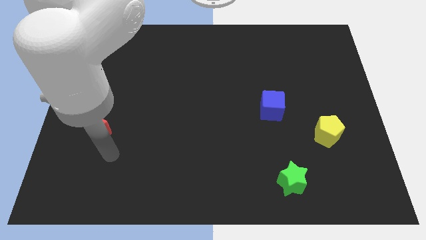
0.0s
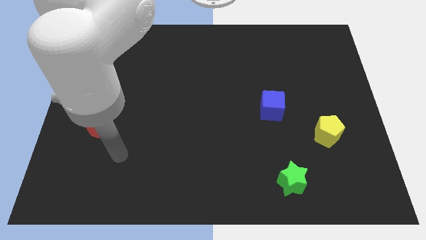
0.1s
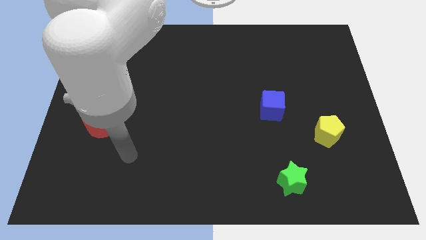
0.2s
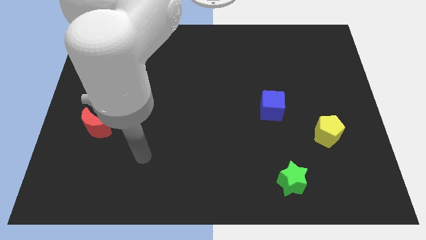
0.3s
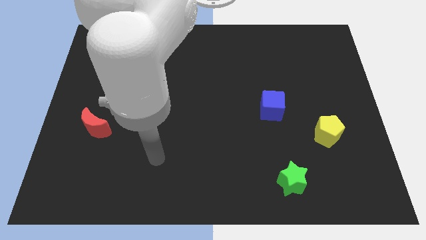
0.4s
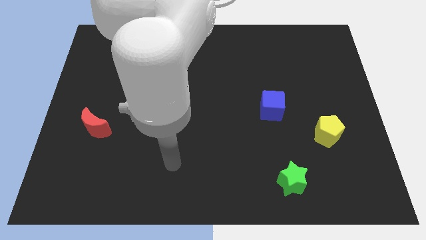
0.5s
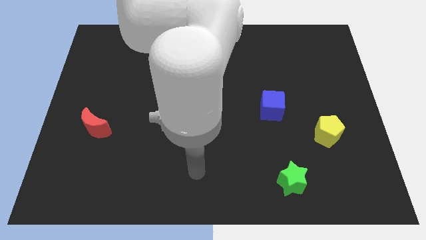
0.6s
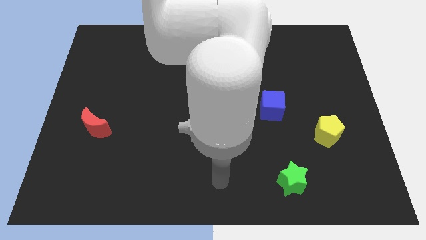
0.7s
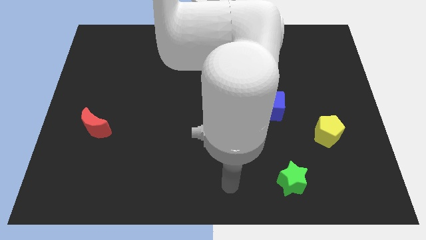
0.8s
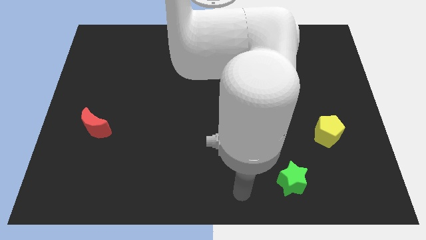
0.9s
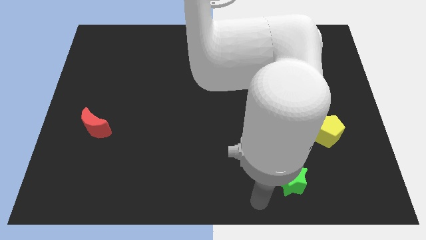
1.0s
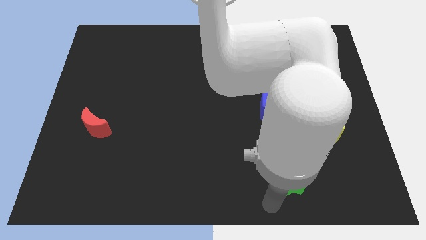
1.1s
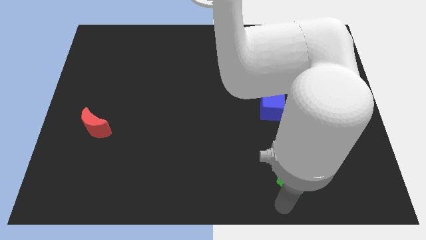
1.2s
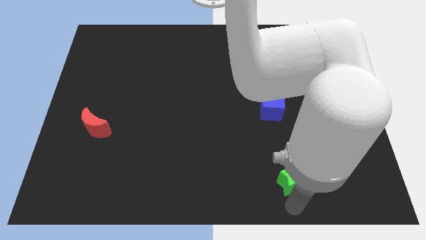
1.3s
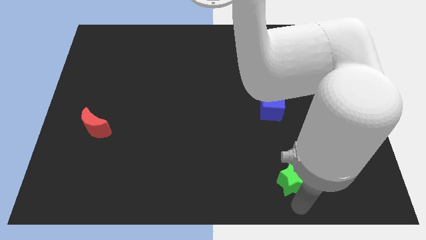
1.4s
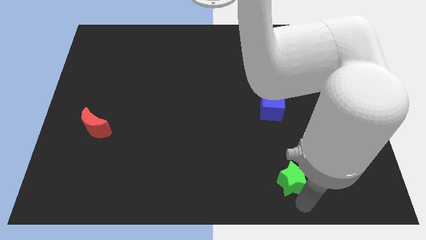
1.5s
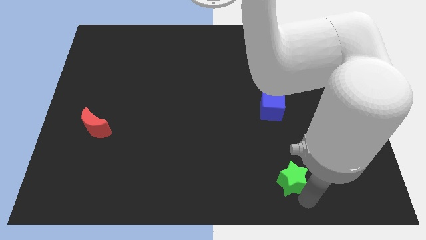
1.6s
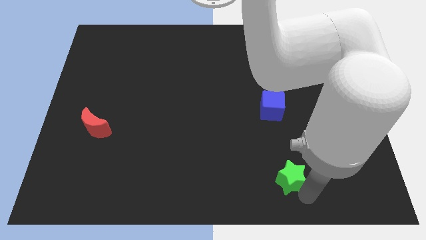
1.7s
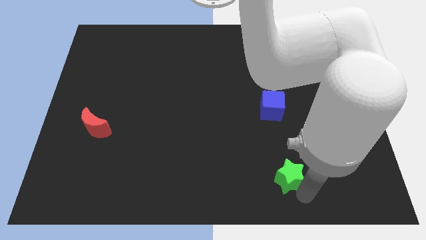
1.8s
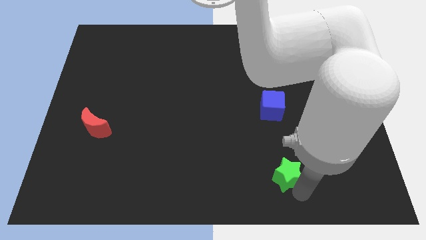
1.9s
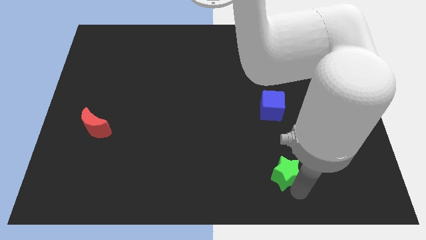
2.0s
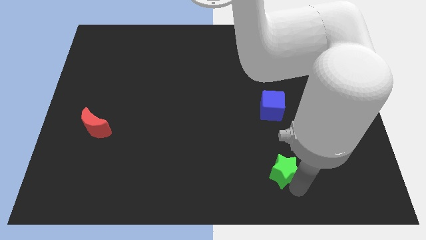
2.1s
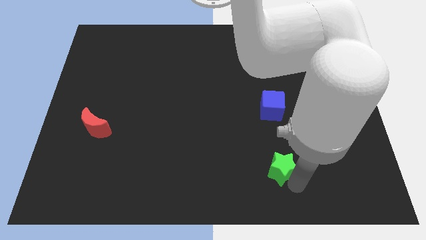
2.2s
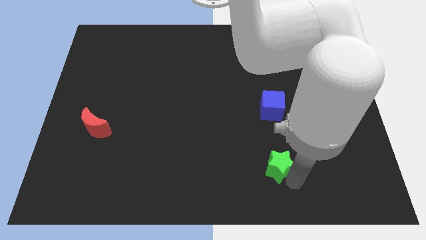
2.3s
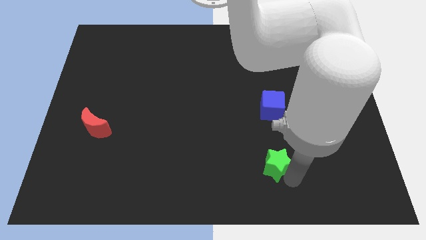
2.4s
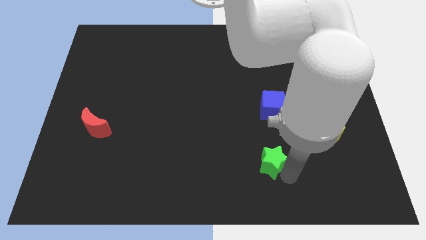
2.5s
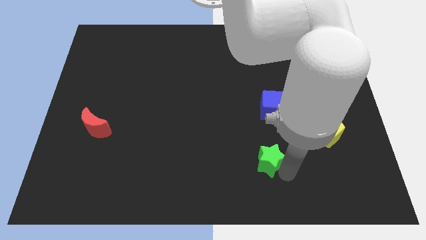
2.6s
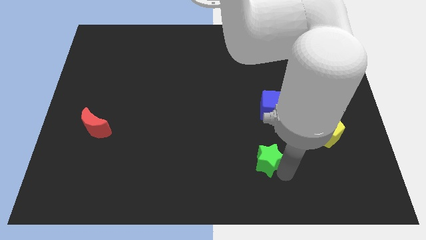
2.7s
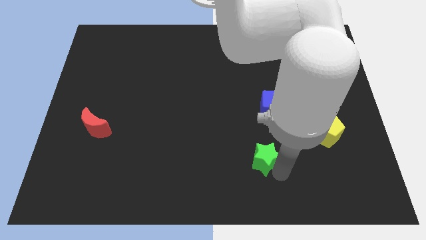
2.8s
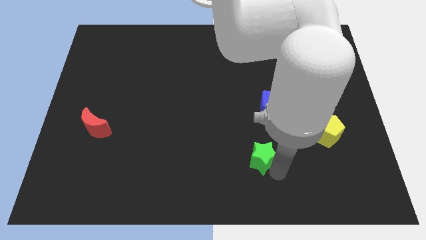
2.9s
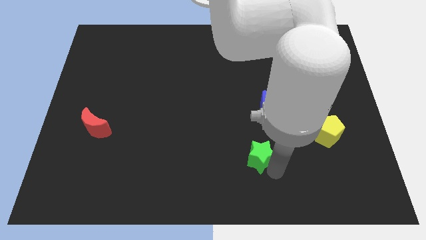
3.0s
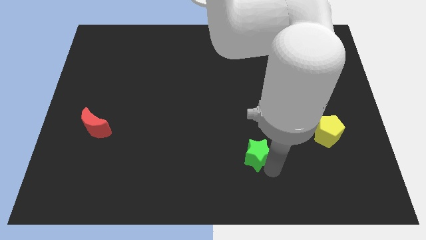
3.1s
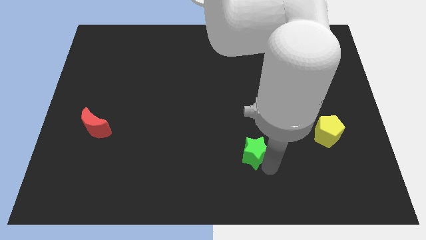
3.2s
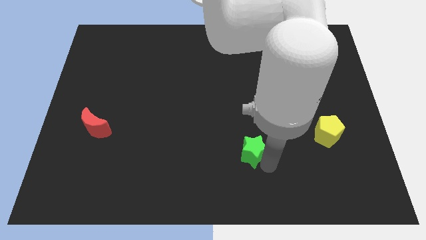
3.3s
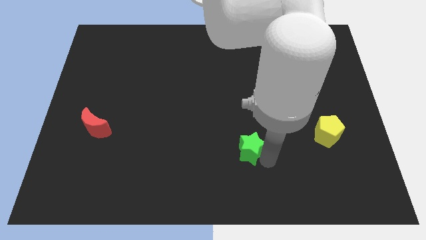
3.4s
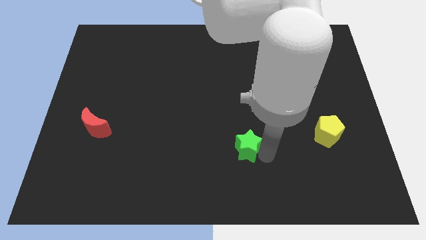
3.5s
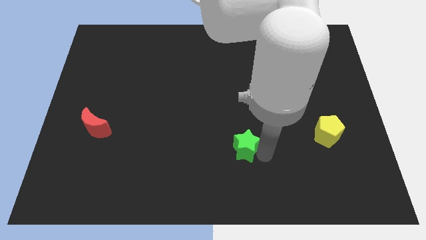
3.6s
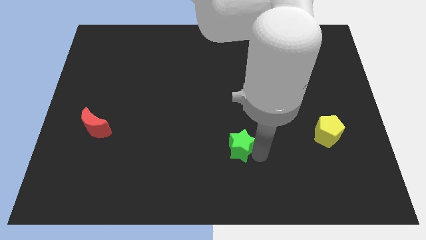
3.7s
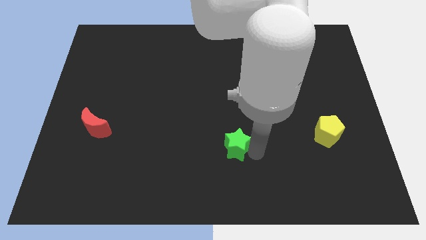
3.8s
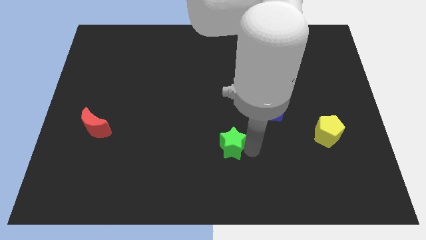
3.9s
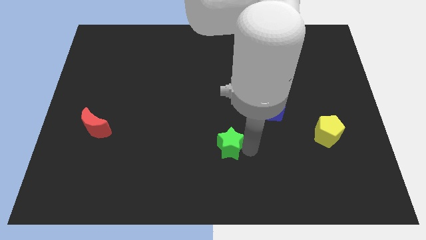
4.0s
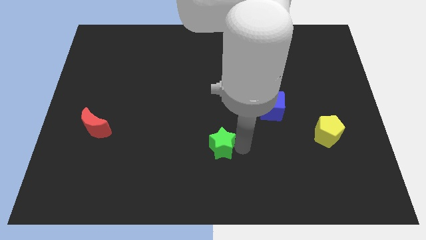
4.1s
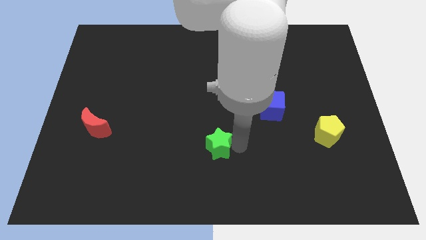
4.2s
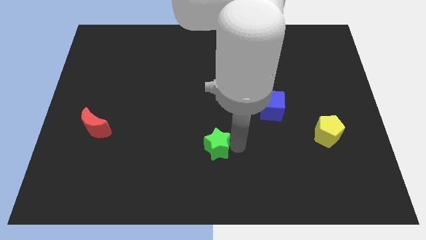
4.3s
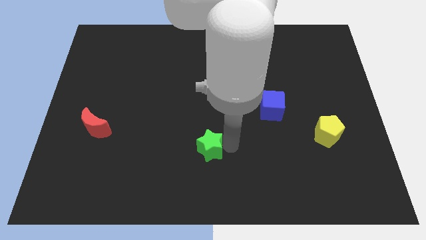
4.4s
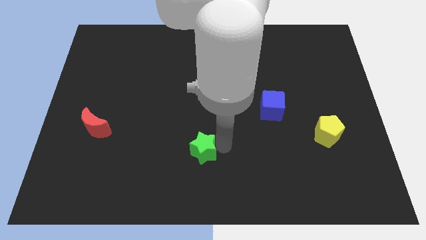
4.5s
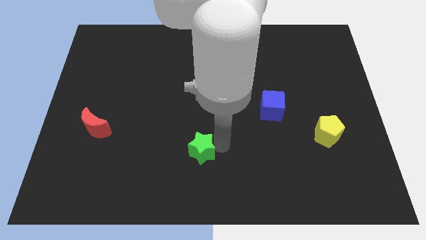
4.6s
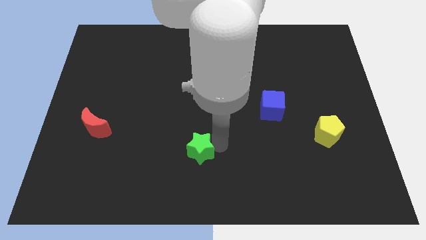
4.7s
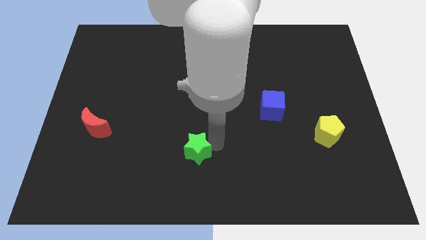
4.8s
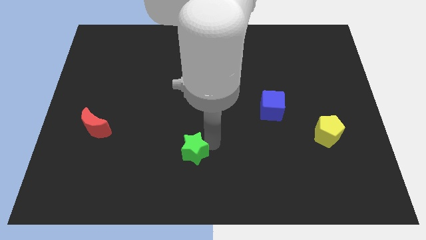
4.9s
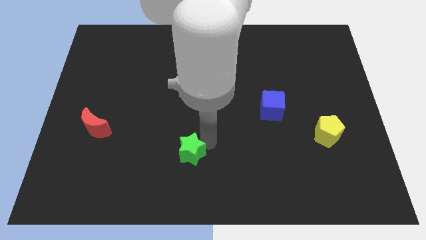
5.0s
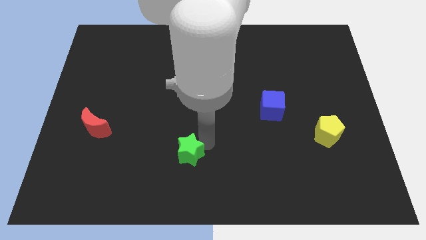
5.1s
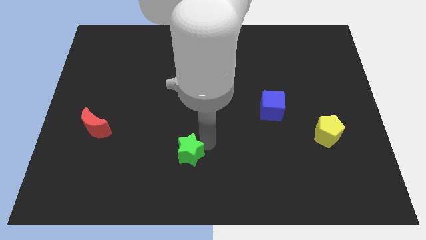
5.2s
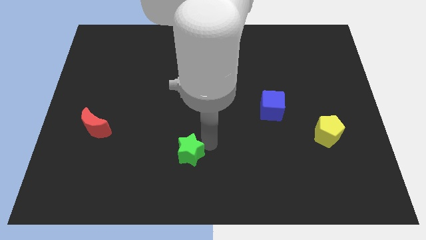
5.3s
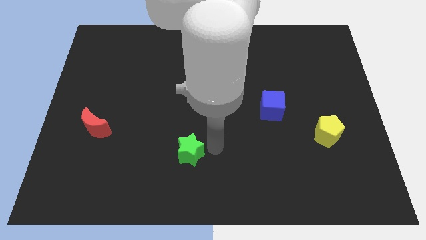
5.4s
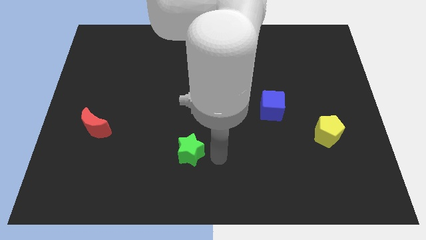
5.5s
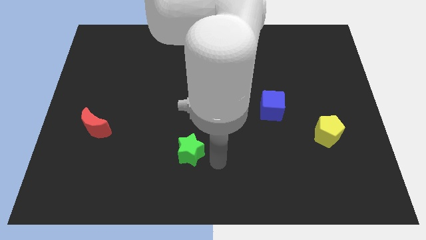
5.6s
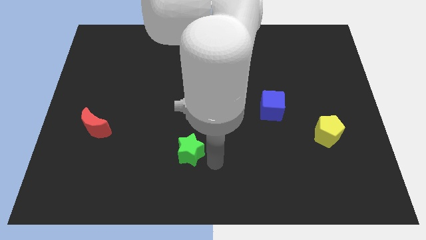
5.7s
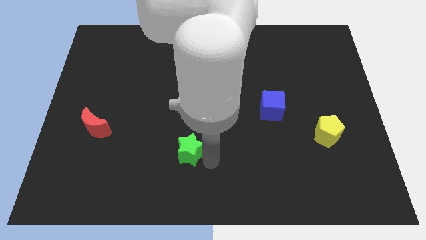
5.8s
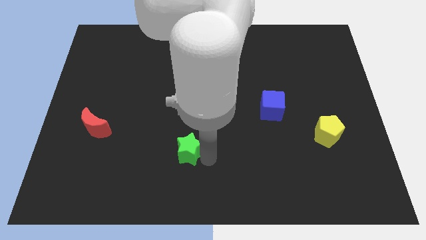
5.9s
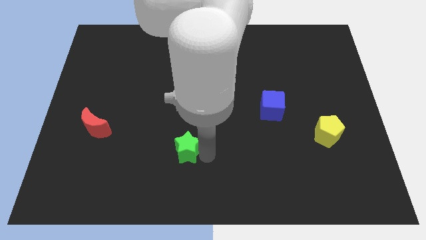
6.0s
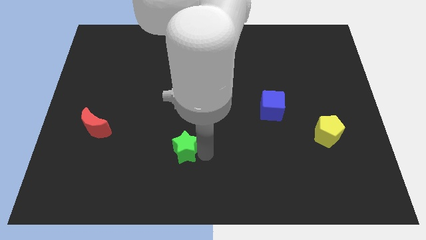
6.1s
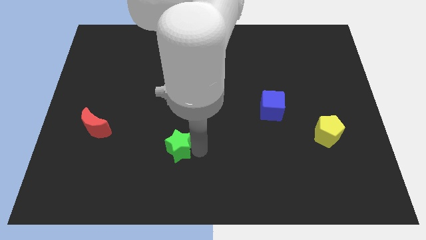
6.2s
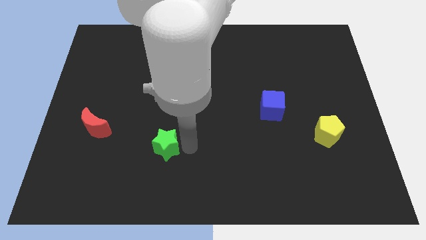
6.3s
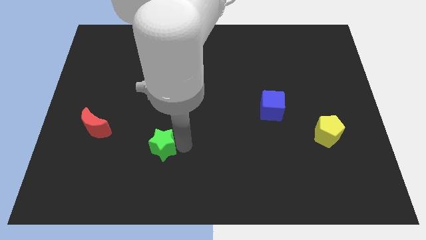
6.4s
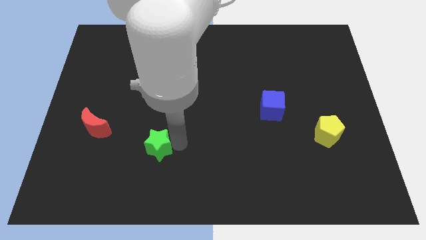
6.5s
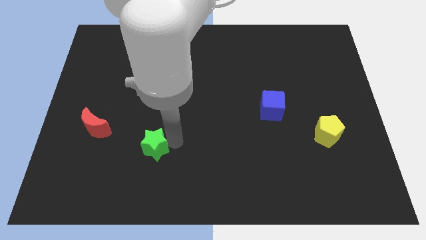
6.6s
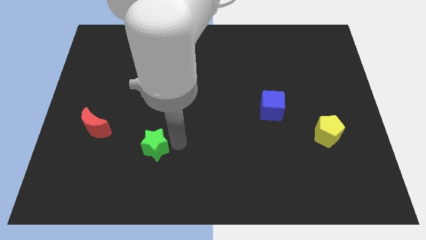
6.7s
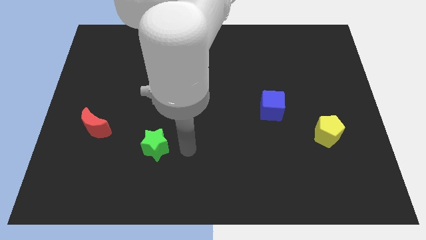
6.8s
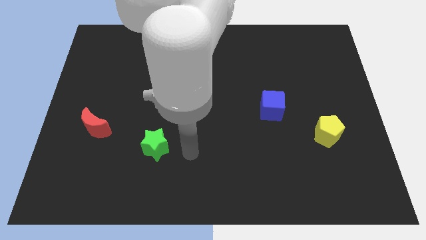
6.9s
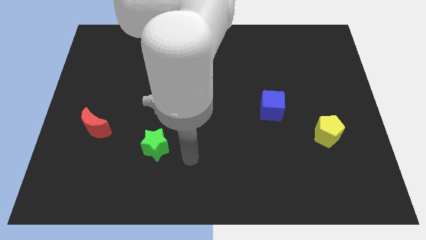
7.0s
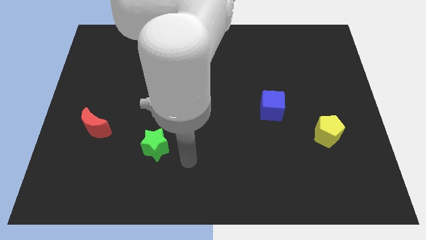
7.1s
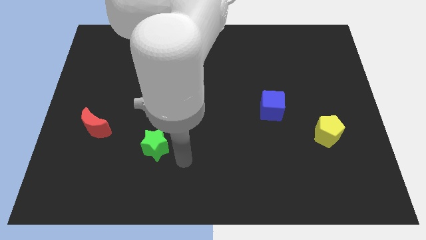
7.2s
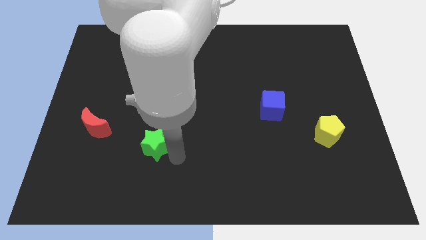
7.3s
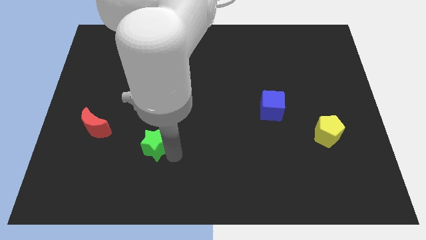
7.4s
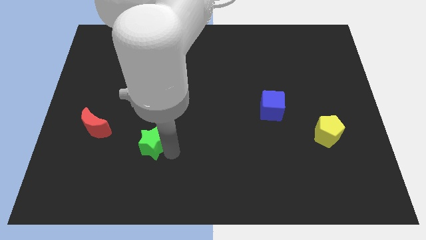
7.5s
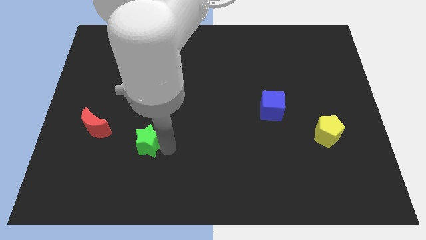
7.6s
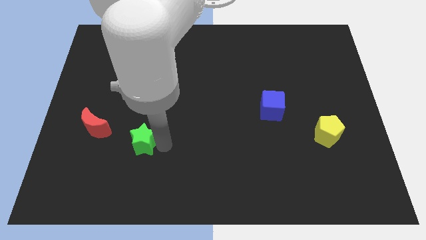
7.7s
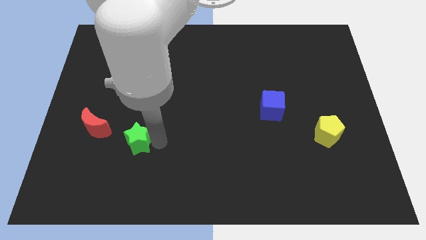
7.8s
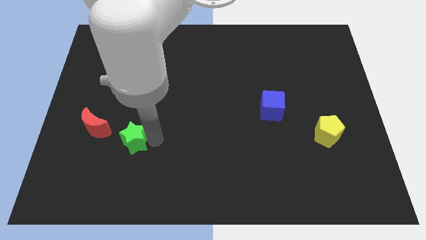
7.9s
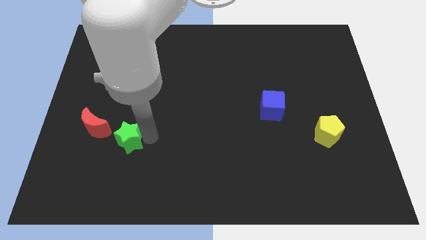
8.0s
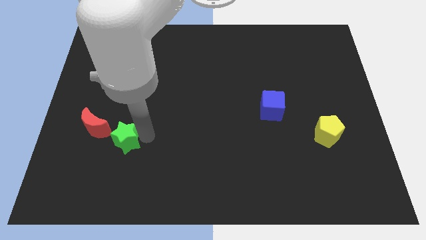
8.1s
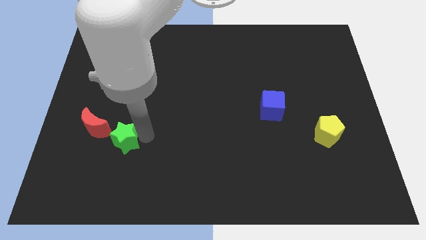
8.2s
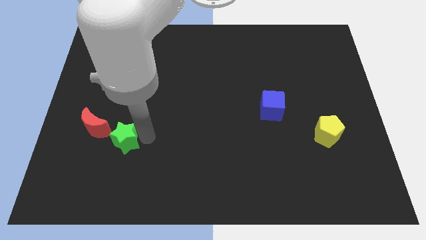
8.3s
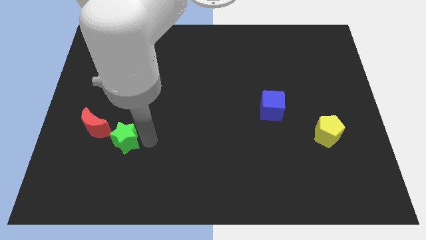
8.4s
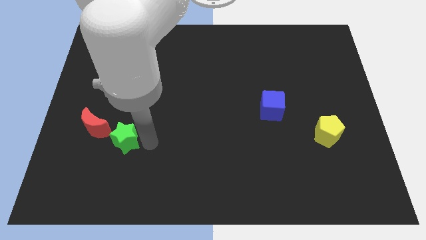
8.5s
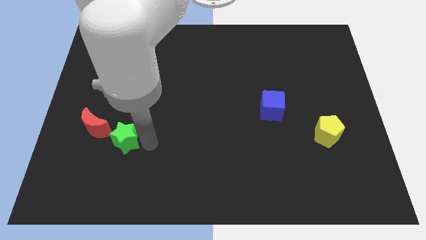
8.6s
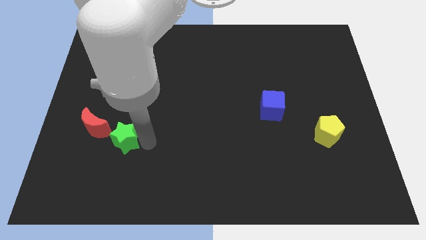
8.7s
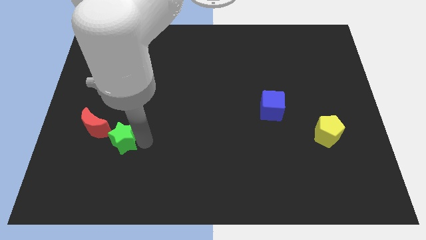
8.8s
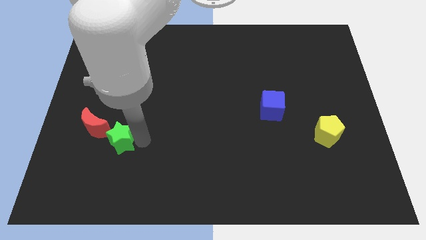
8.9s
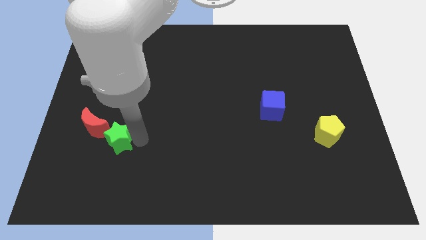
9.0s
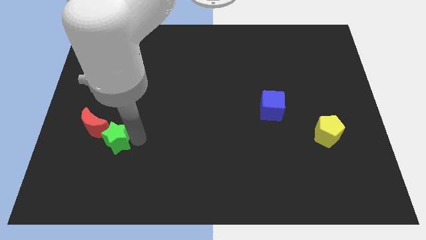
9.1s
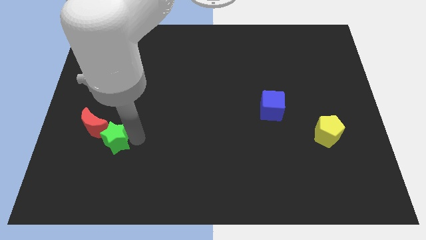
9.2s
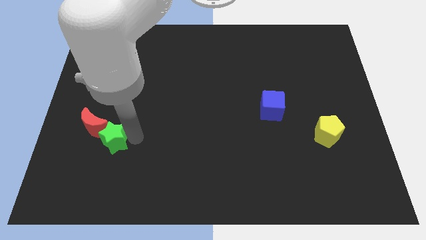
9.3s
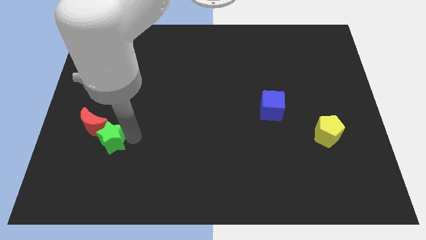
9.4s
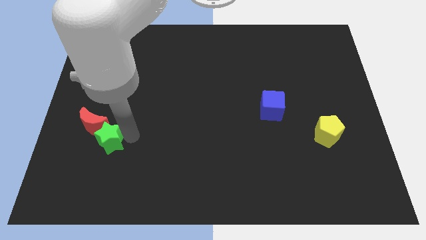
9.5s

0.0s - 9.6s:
put the green star next to the red block
